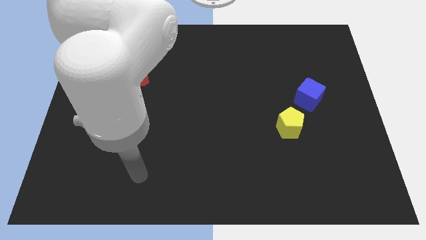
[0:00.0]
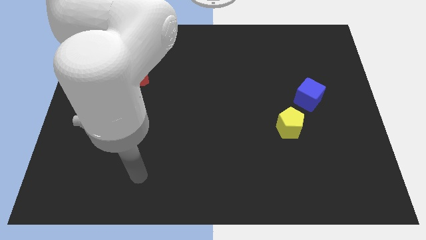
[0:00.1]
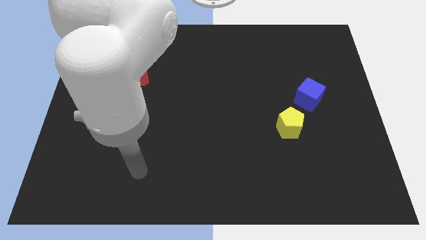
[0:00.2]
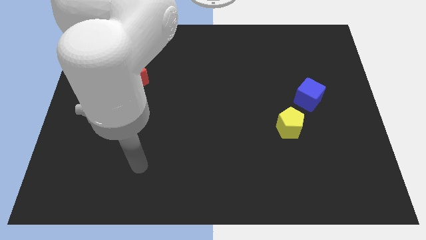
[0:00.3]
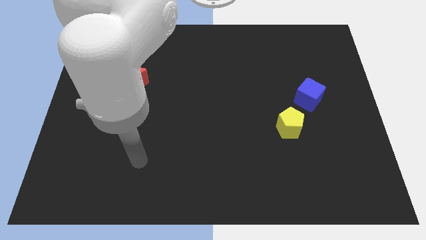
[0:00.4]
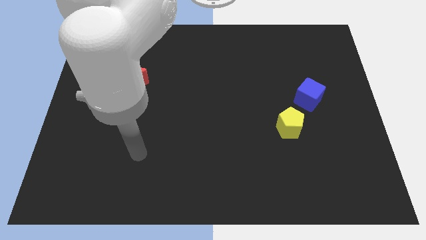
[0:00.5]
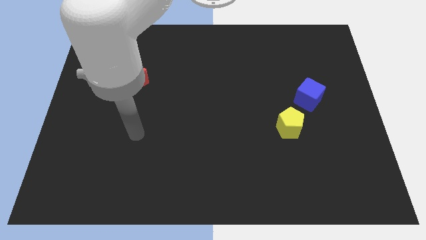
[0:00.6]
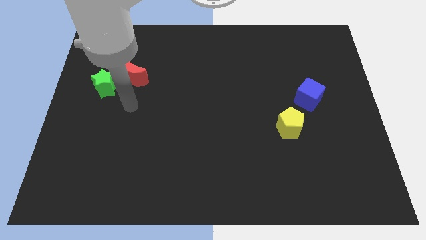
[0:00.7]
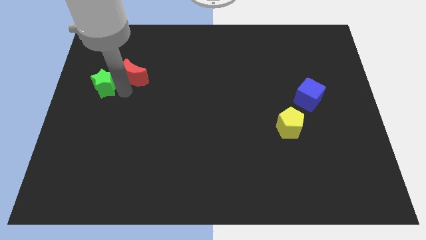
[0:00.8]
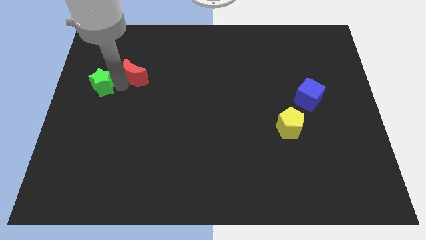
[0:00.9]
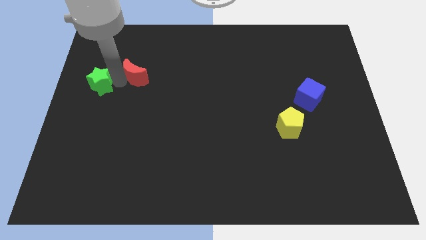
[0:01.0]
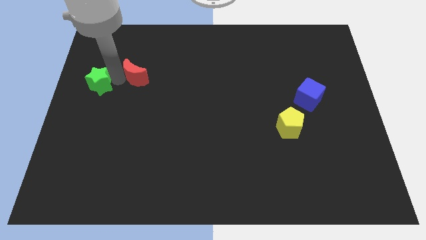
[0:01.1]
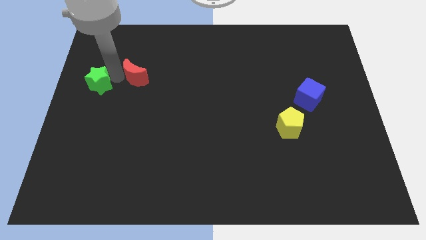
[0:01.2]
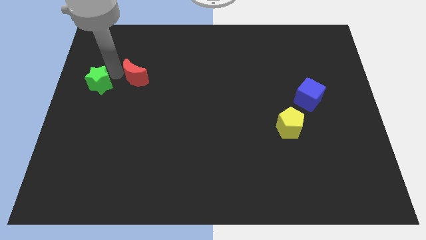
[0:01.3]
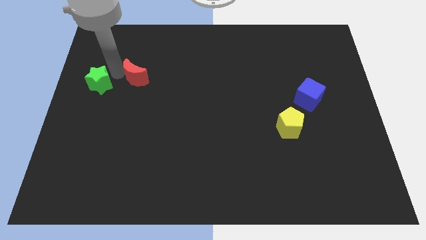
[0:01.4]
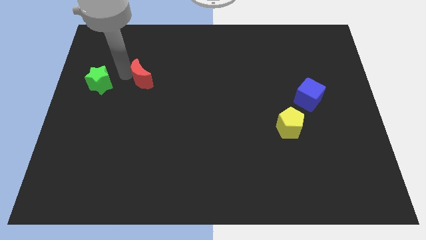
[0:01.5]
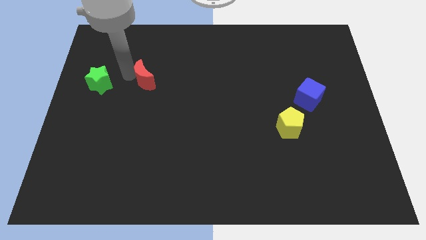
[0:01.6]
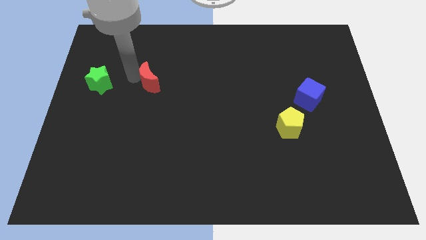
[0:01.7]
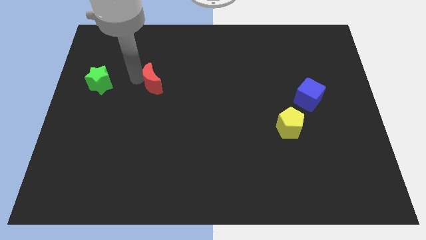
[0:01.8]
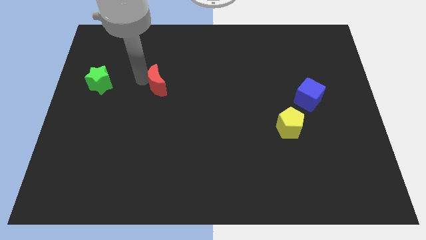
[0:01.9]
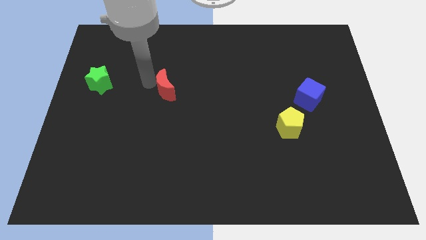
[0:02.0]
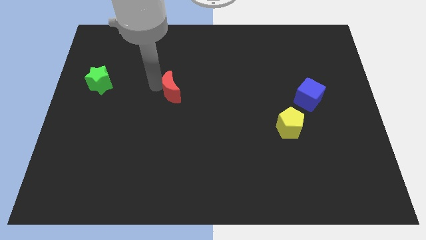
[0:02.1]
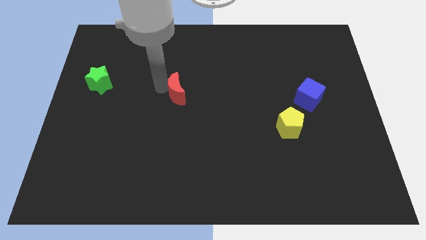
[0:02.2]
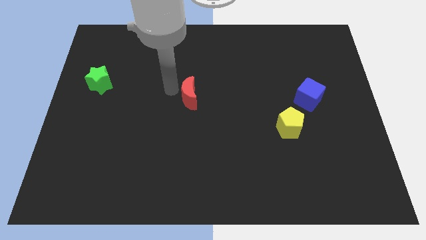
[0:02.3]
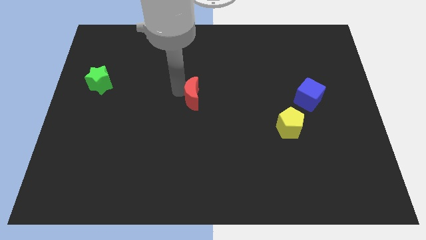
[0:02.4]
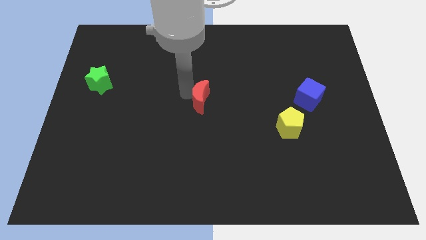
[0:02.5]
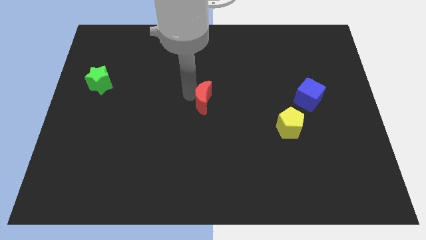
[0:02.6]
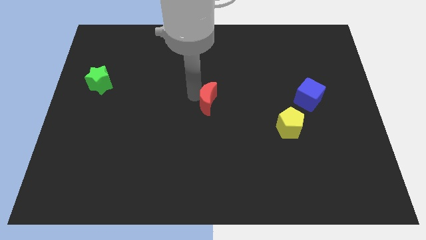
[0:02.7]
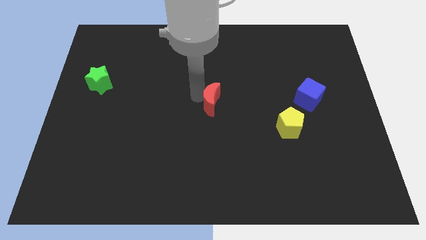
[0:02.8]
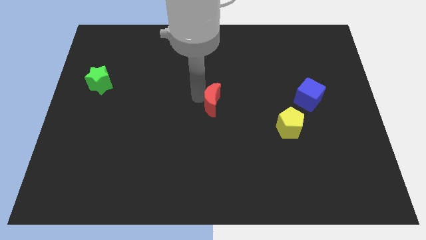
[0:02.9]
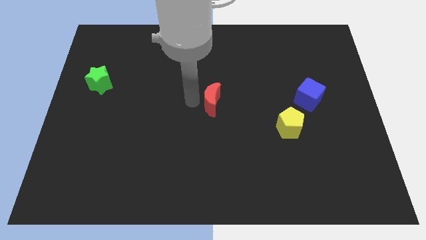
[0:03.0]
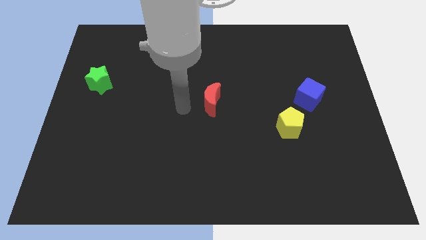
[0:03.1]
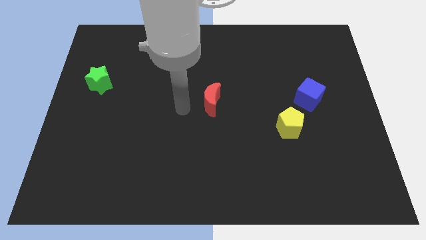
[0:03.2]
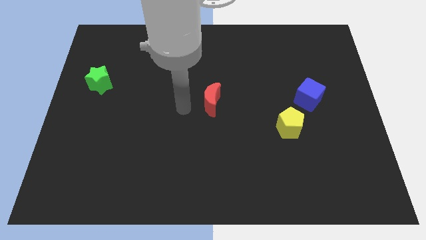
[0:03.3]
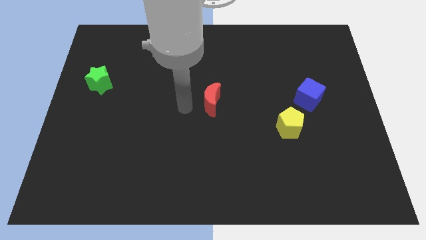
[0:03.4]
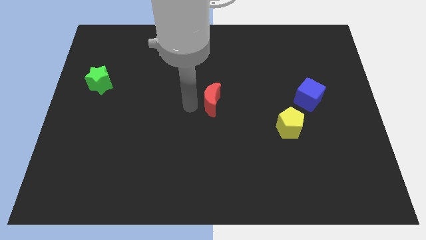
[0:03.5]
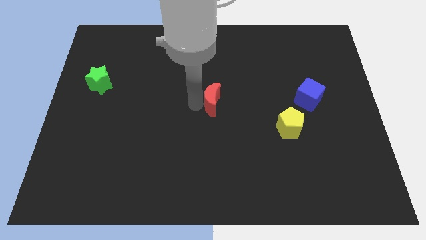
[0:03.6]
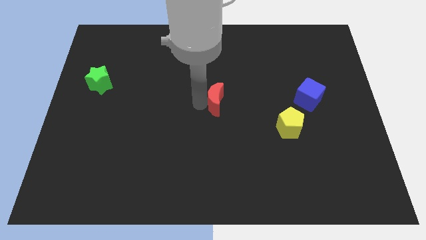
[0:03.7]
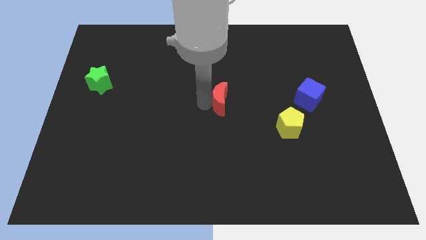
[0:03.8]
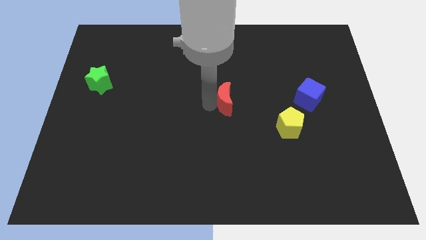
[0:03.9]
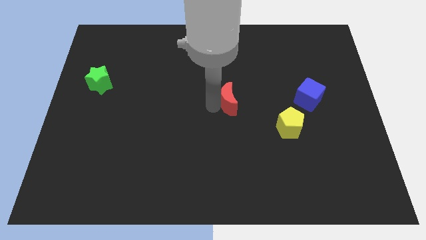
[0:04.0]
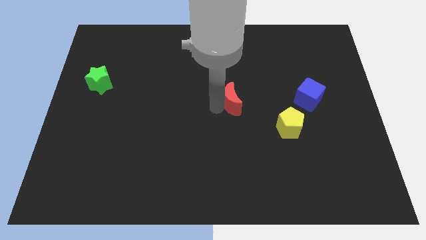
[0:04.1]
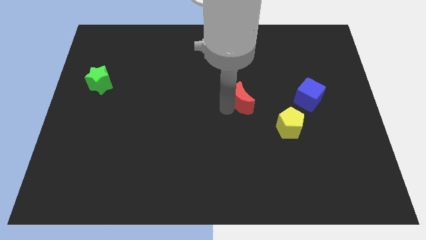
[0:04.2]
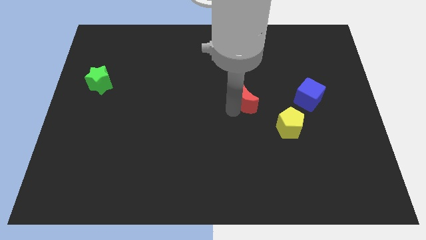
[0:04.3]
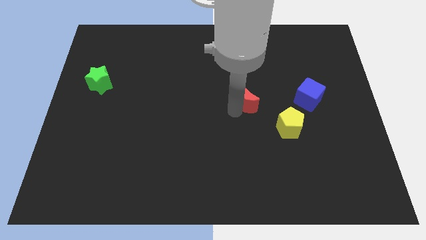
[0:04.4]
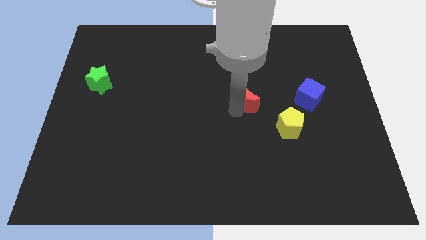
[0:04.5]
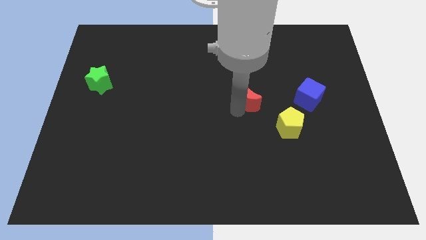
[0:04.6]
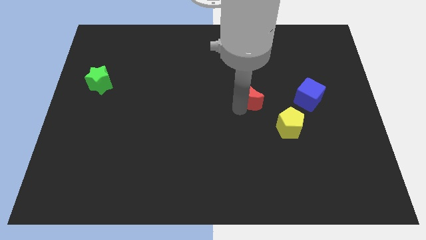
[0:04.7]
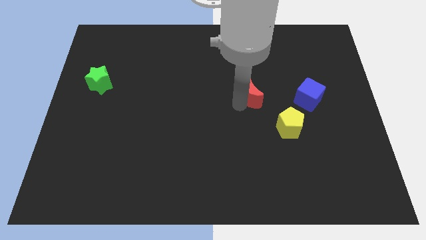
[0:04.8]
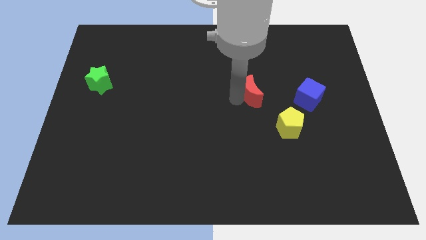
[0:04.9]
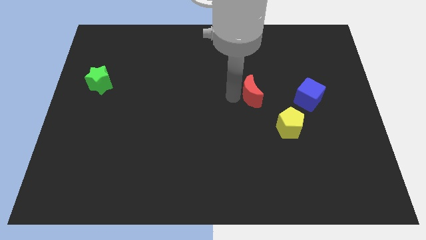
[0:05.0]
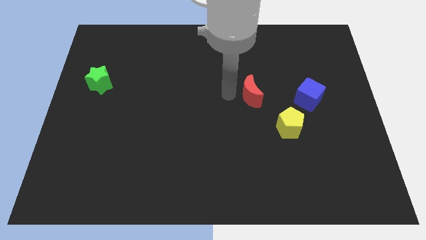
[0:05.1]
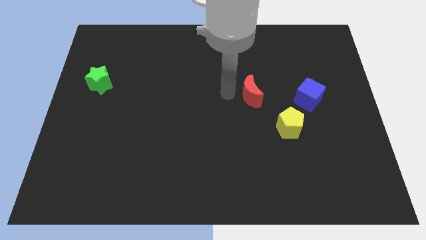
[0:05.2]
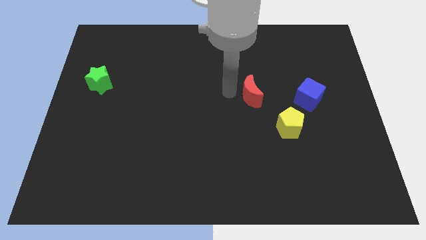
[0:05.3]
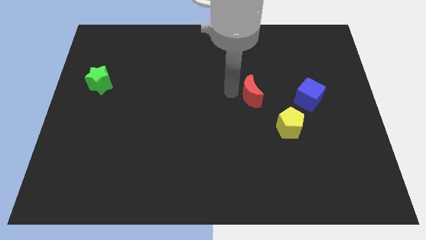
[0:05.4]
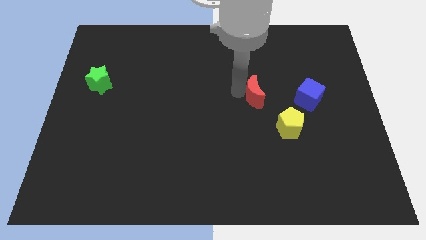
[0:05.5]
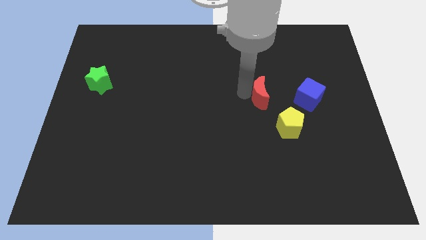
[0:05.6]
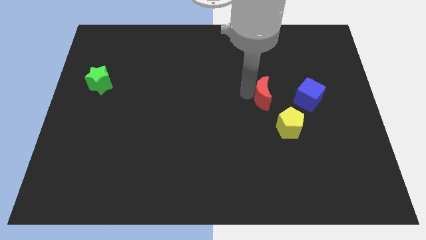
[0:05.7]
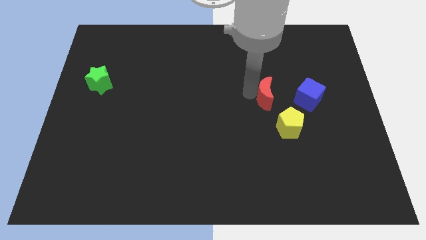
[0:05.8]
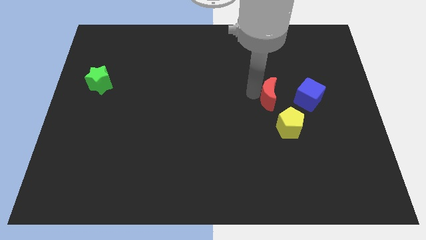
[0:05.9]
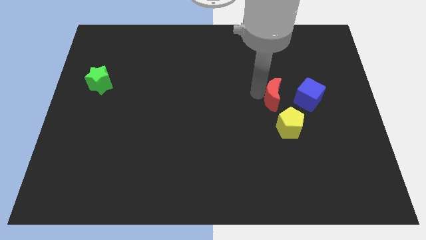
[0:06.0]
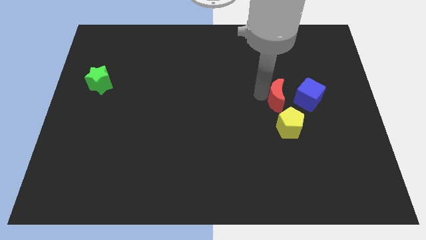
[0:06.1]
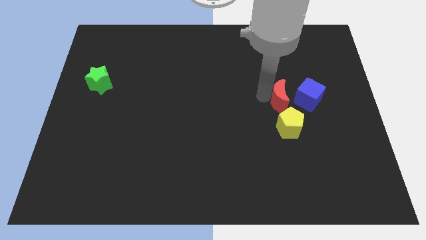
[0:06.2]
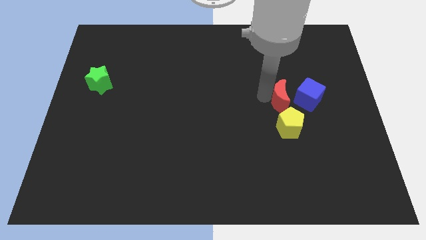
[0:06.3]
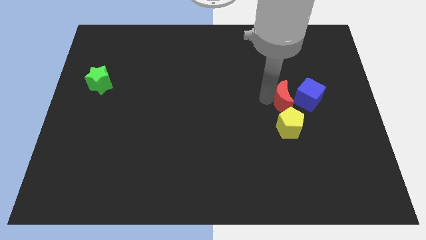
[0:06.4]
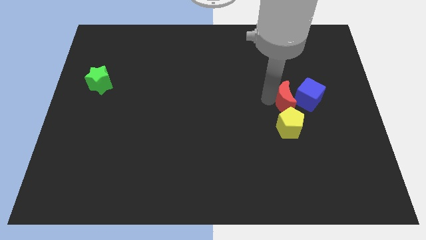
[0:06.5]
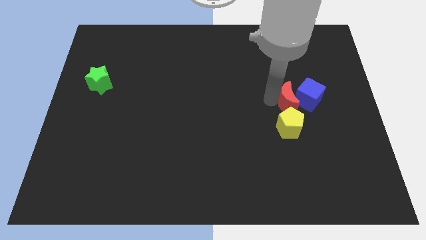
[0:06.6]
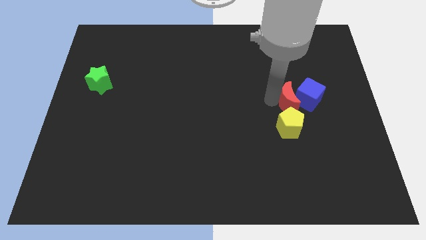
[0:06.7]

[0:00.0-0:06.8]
push the moon close to the cube

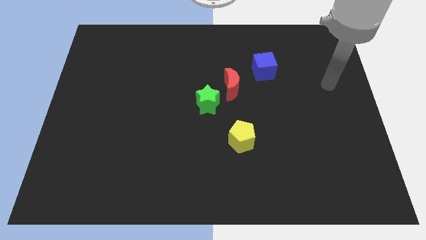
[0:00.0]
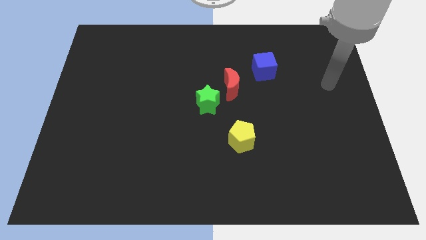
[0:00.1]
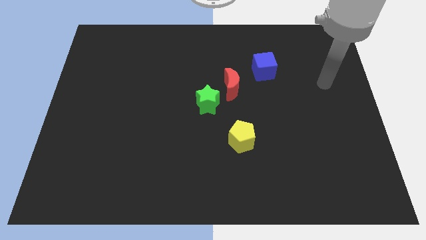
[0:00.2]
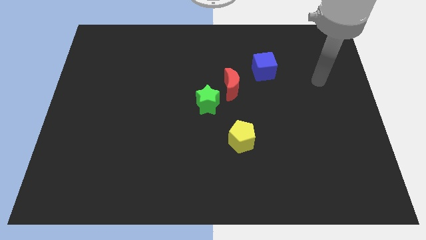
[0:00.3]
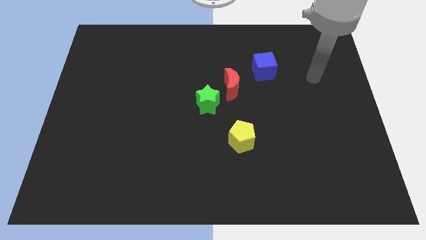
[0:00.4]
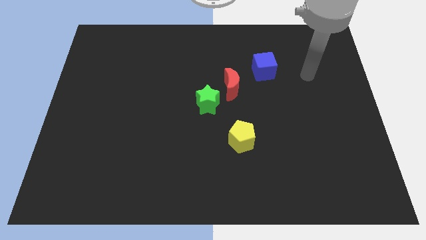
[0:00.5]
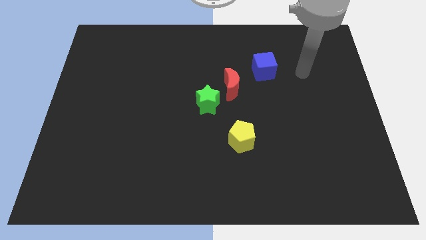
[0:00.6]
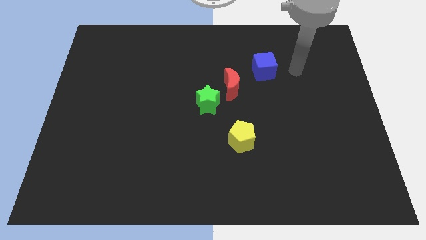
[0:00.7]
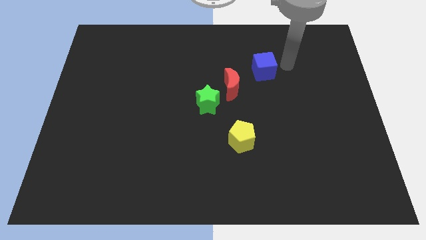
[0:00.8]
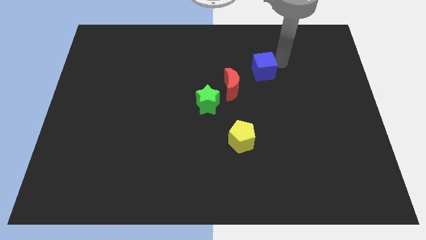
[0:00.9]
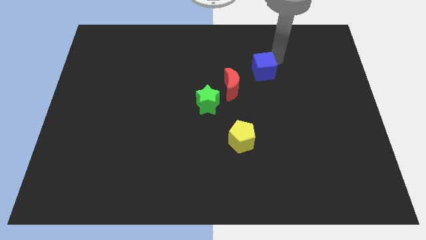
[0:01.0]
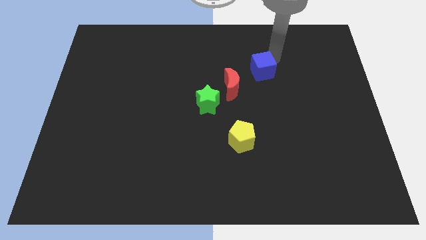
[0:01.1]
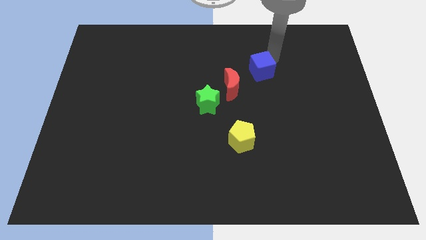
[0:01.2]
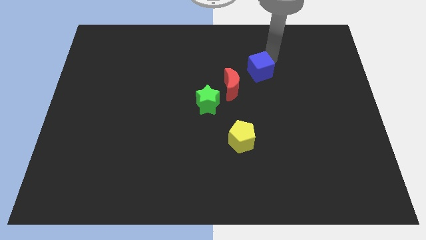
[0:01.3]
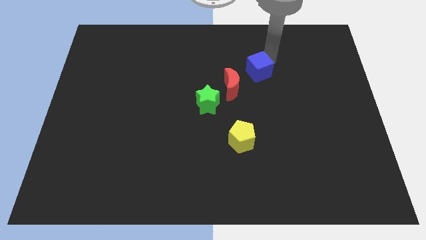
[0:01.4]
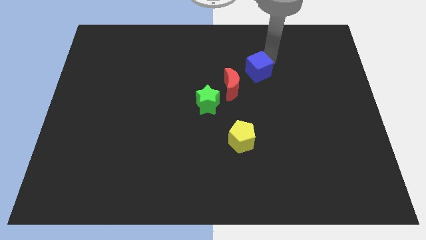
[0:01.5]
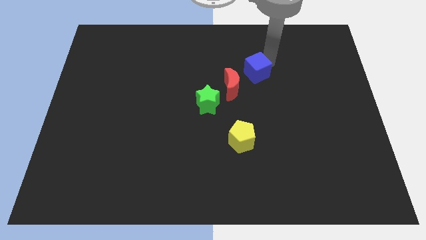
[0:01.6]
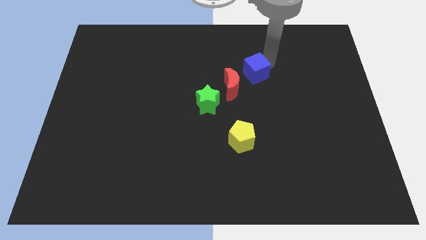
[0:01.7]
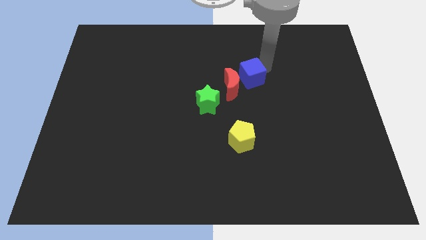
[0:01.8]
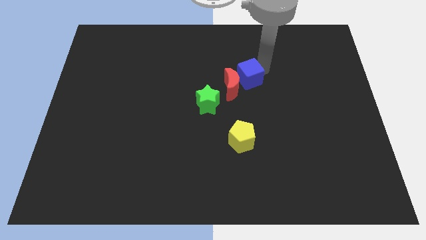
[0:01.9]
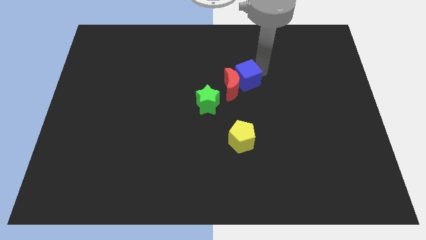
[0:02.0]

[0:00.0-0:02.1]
put the blue block to the red block
